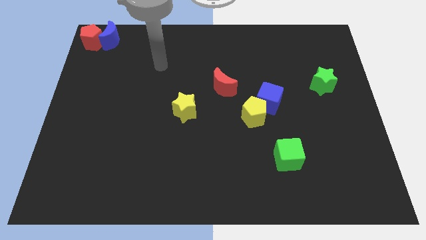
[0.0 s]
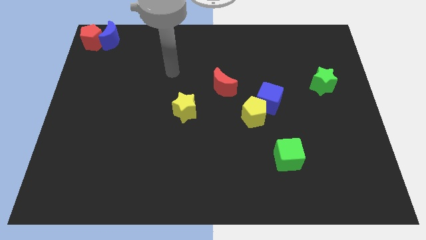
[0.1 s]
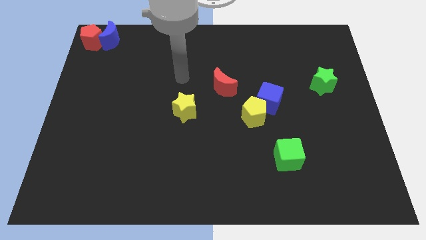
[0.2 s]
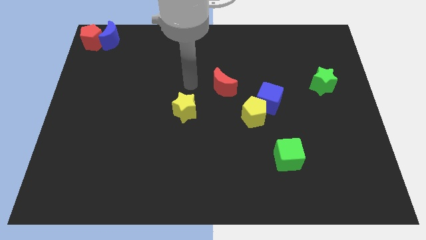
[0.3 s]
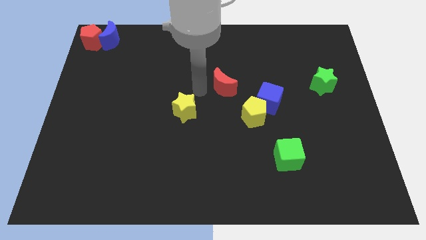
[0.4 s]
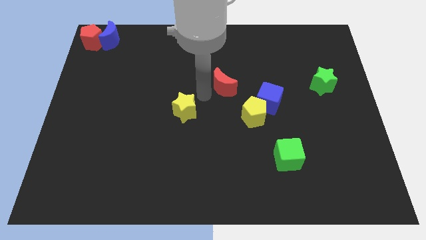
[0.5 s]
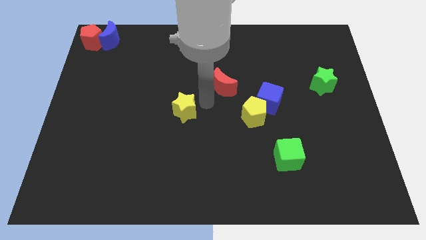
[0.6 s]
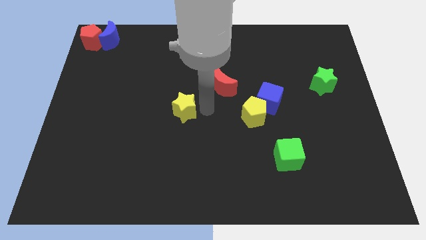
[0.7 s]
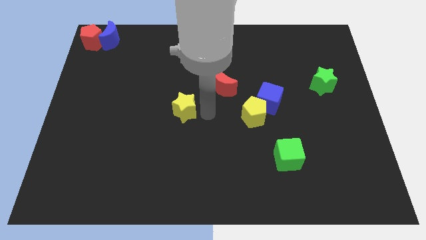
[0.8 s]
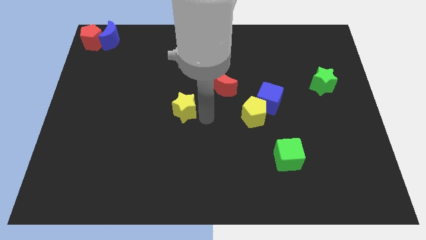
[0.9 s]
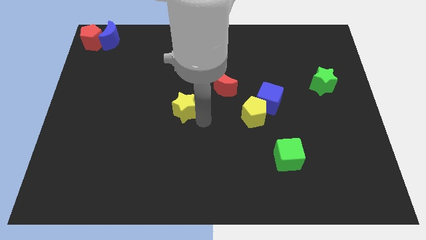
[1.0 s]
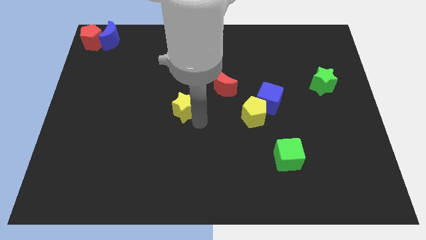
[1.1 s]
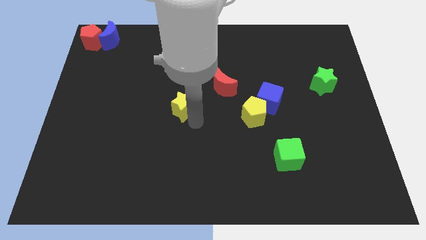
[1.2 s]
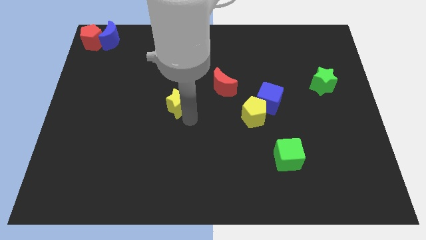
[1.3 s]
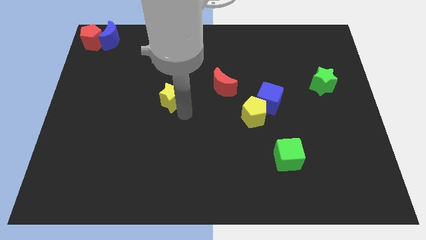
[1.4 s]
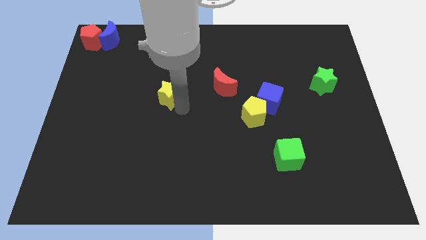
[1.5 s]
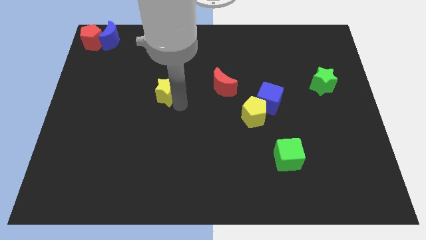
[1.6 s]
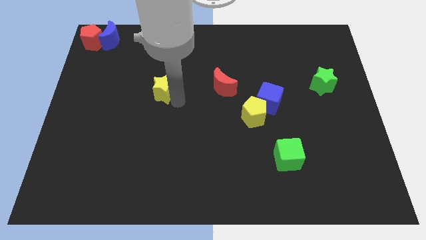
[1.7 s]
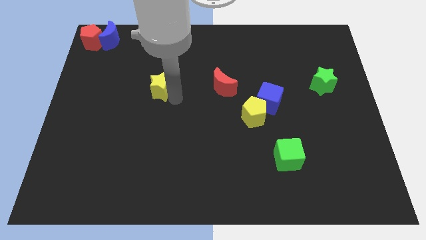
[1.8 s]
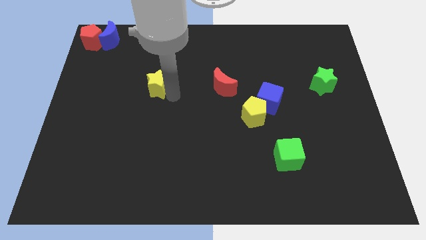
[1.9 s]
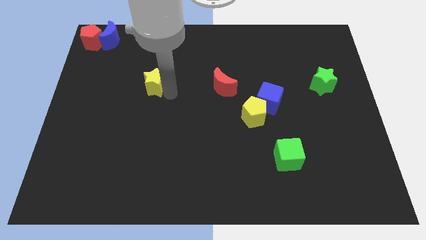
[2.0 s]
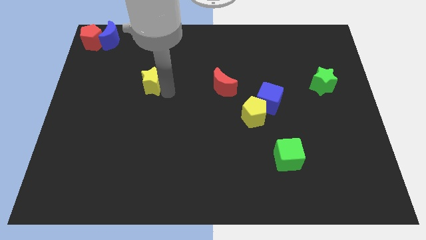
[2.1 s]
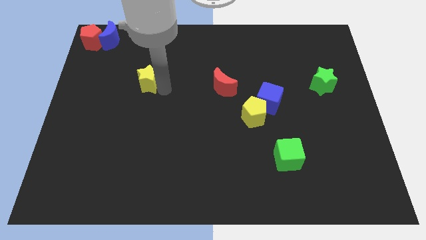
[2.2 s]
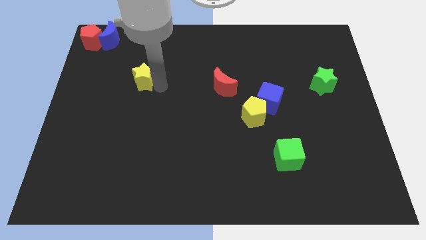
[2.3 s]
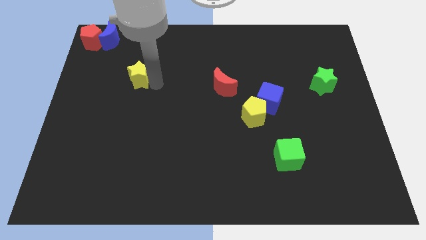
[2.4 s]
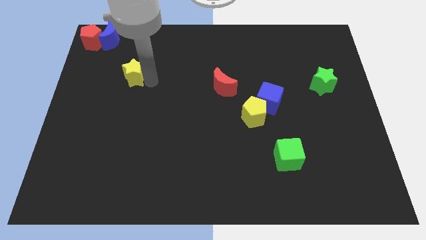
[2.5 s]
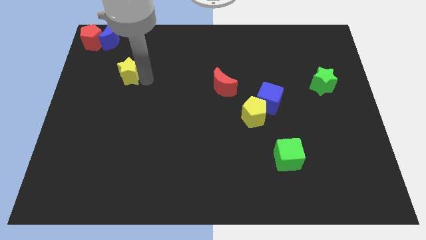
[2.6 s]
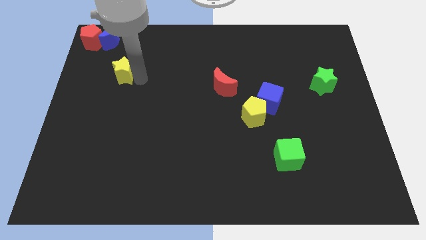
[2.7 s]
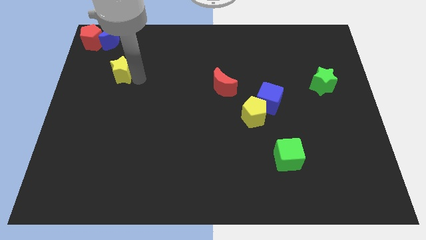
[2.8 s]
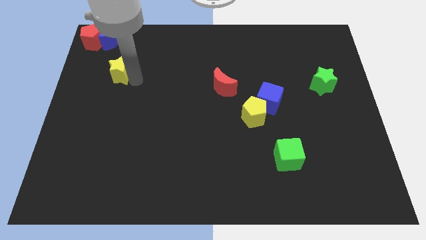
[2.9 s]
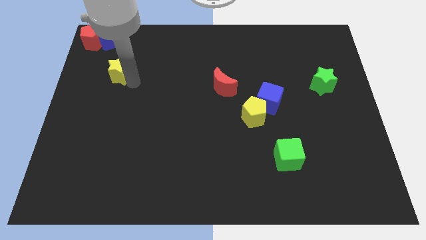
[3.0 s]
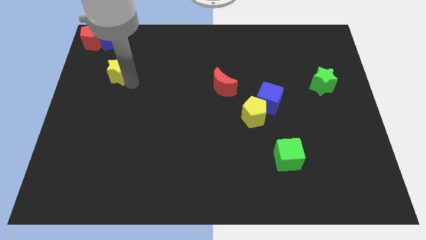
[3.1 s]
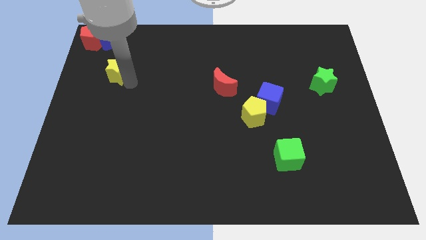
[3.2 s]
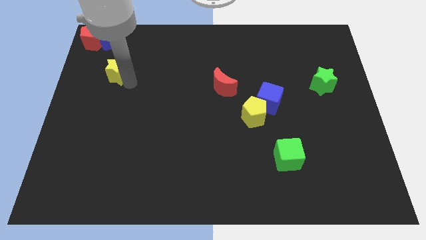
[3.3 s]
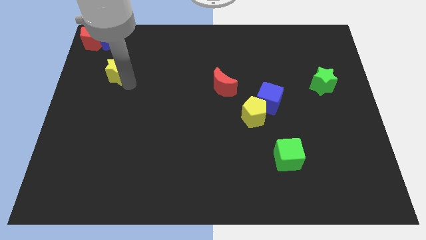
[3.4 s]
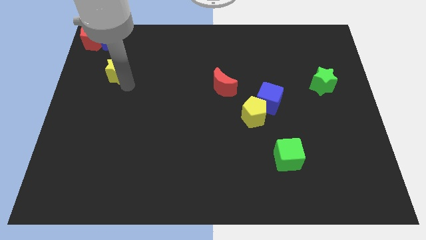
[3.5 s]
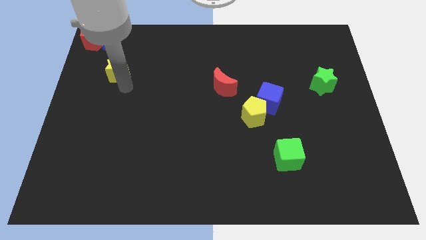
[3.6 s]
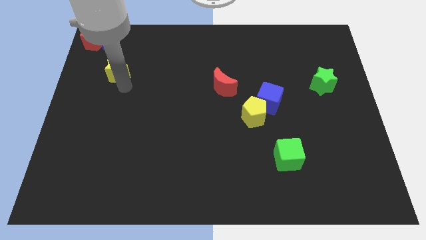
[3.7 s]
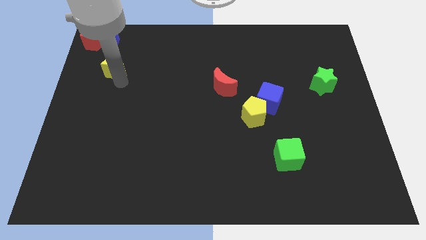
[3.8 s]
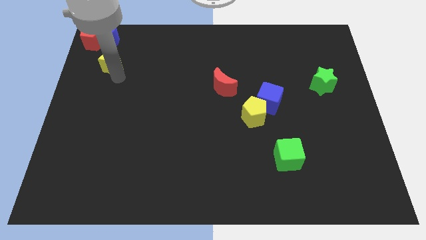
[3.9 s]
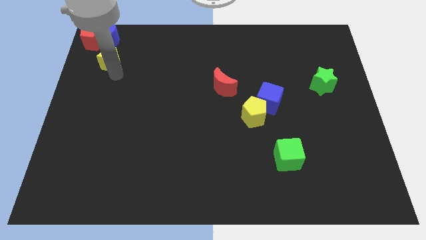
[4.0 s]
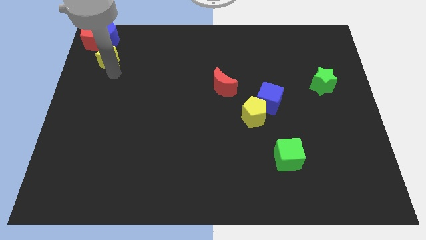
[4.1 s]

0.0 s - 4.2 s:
move yellow star to the bottom of the blue moon

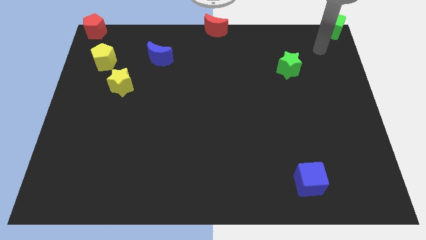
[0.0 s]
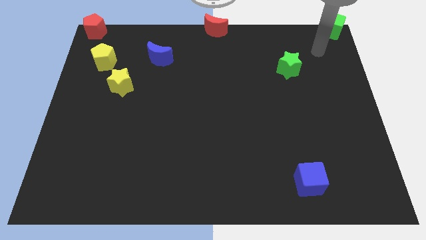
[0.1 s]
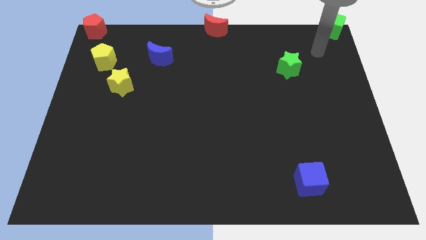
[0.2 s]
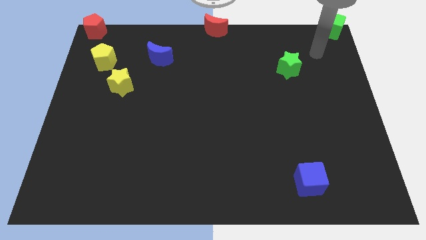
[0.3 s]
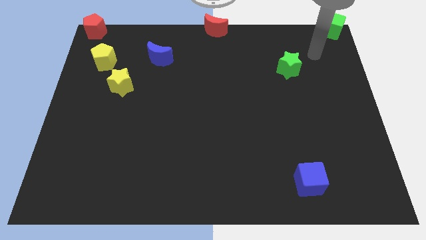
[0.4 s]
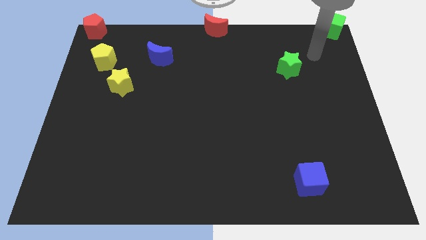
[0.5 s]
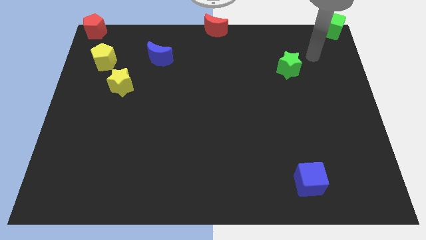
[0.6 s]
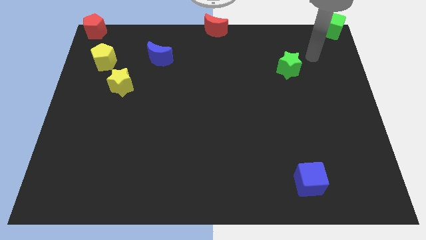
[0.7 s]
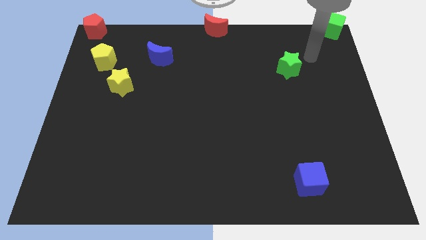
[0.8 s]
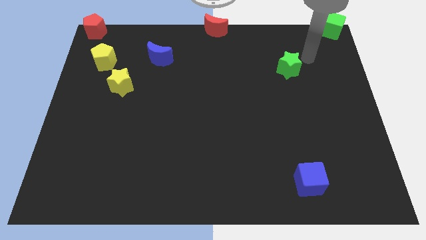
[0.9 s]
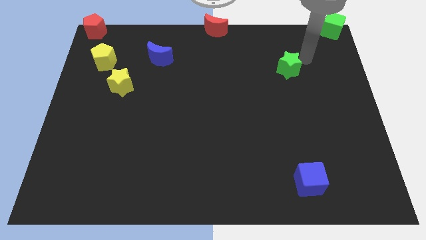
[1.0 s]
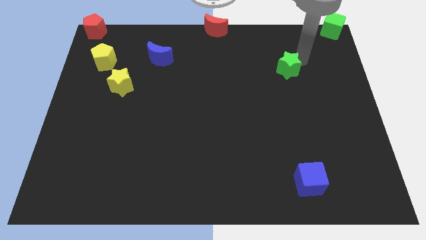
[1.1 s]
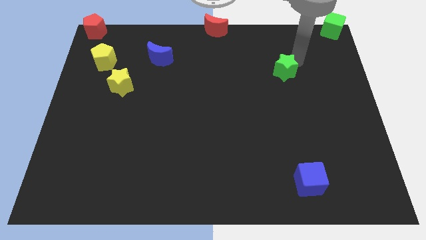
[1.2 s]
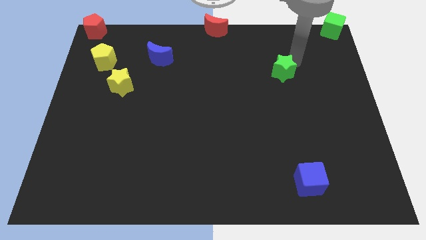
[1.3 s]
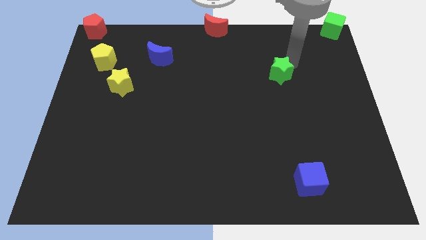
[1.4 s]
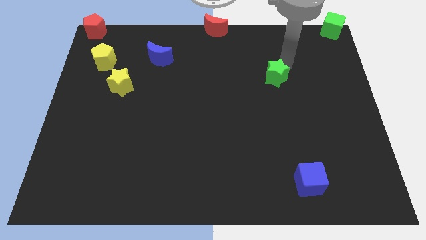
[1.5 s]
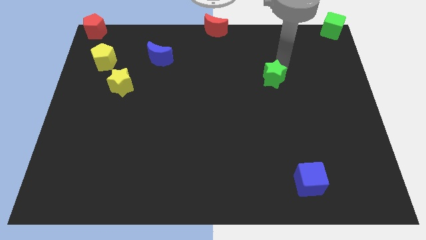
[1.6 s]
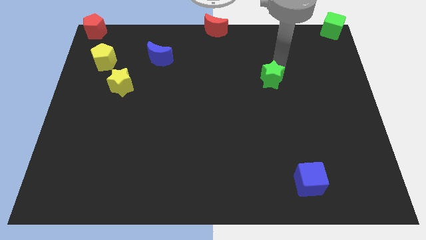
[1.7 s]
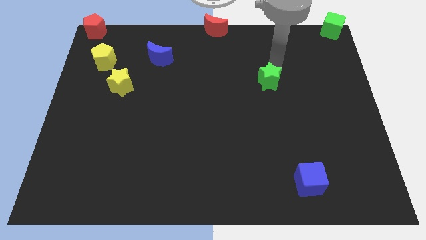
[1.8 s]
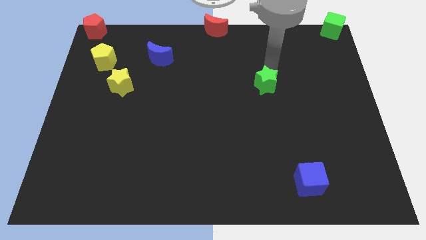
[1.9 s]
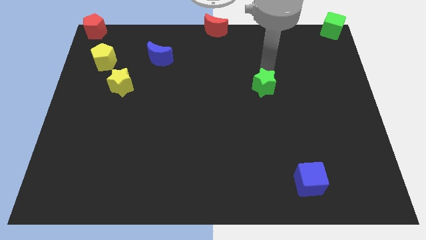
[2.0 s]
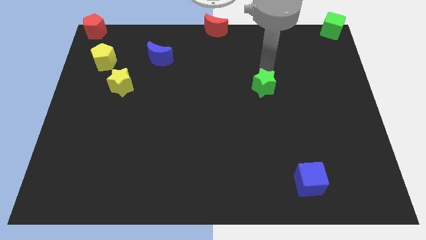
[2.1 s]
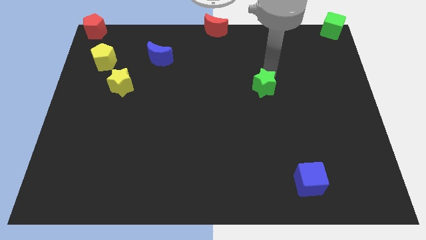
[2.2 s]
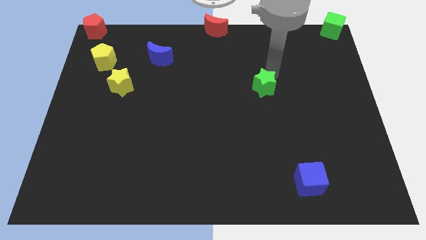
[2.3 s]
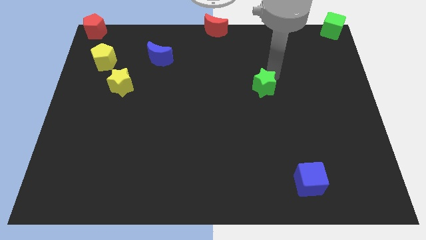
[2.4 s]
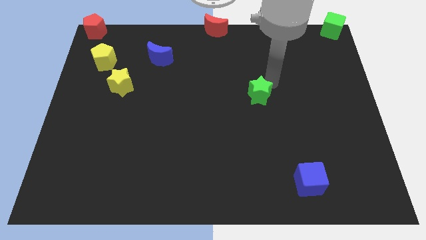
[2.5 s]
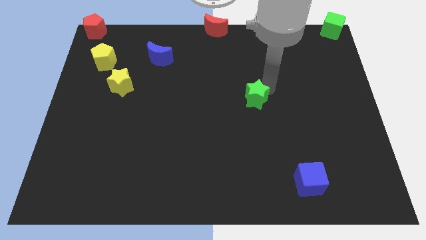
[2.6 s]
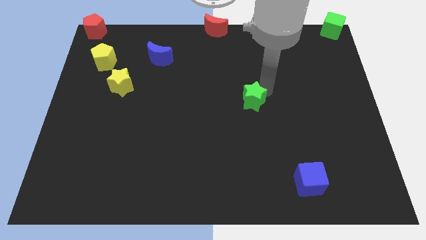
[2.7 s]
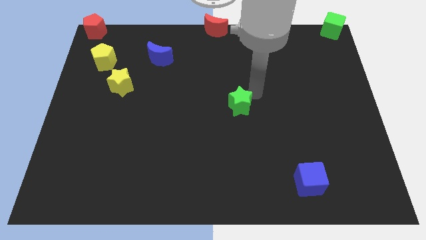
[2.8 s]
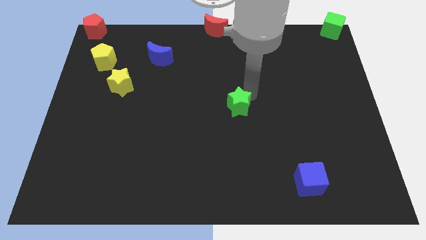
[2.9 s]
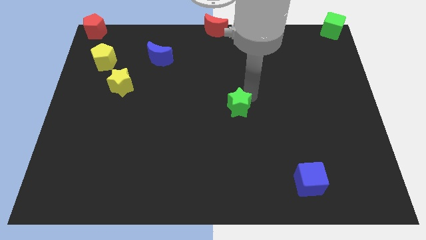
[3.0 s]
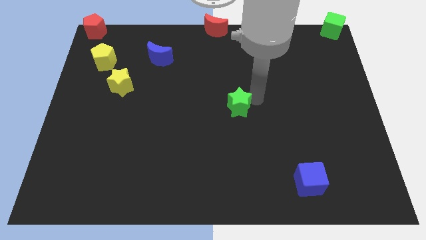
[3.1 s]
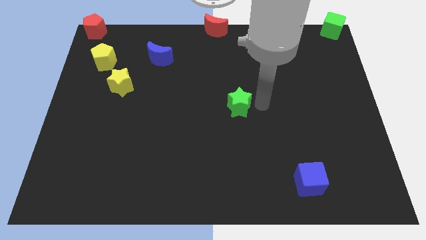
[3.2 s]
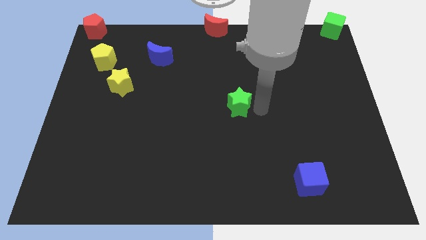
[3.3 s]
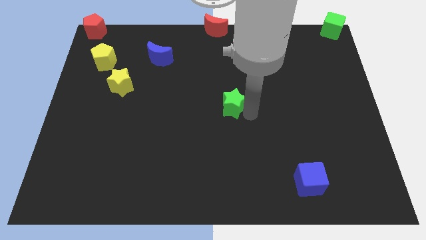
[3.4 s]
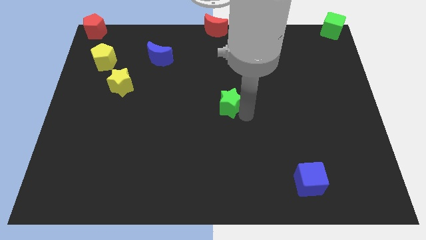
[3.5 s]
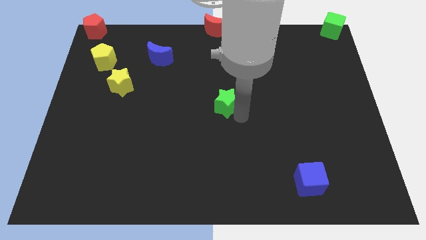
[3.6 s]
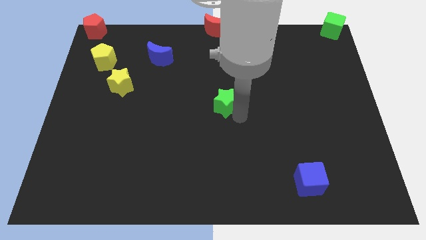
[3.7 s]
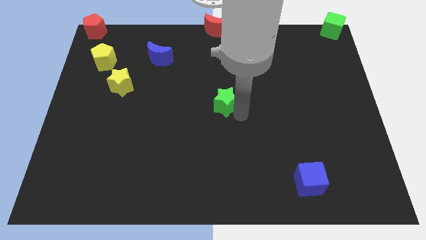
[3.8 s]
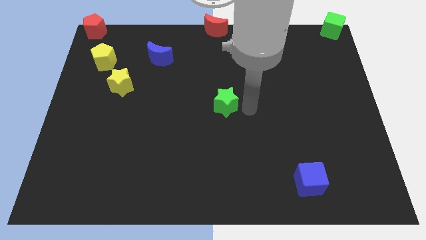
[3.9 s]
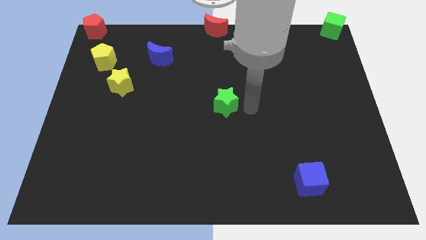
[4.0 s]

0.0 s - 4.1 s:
push the green star to the center of the board

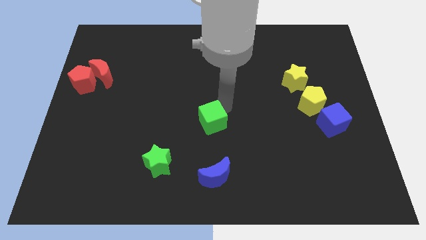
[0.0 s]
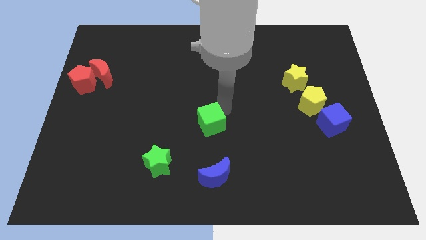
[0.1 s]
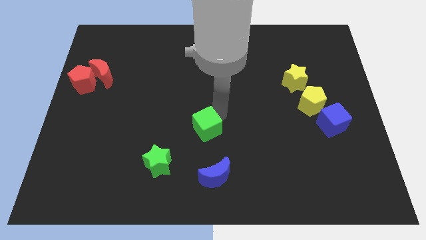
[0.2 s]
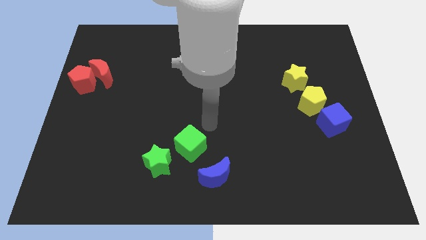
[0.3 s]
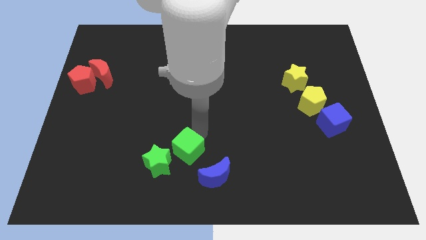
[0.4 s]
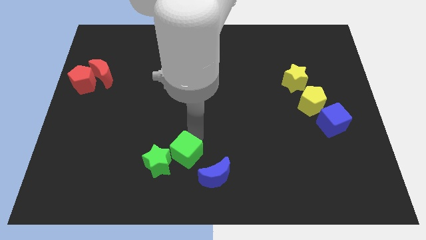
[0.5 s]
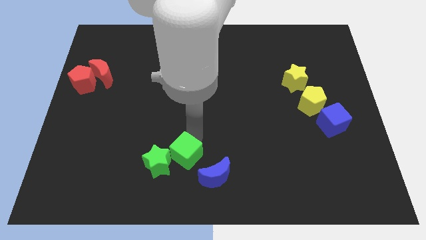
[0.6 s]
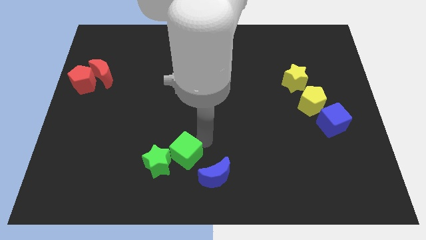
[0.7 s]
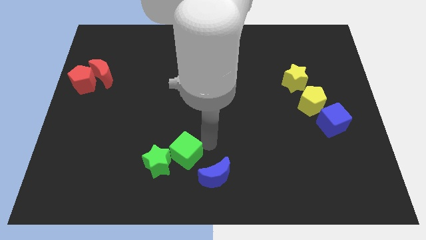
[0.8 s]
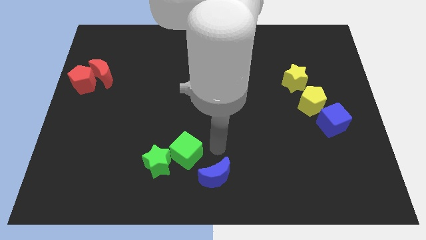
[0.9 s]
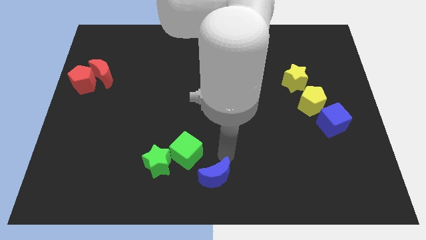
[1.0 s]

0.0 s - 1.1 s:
put the two green blocks together
